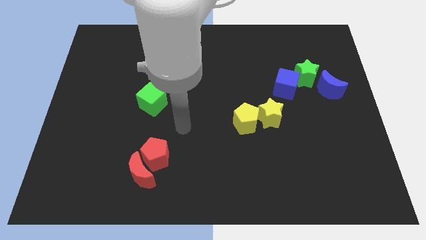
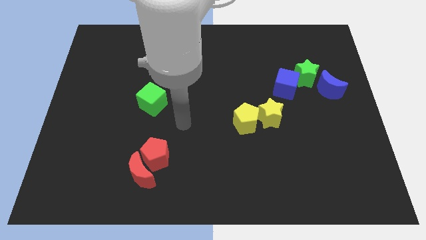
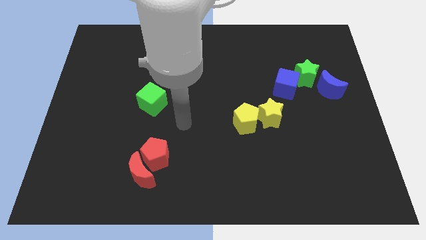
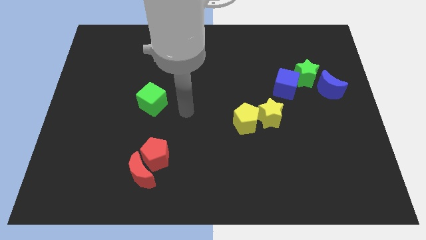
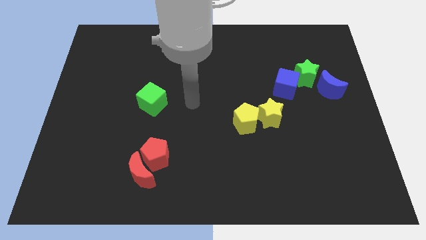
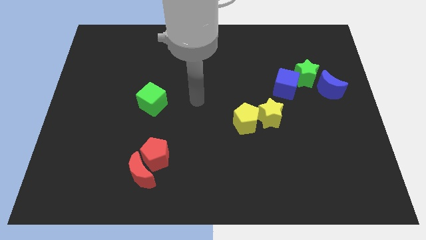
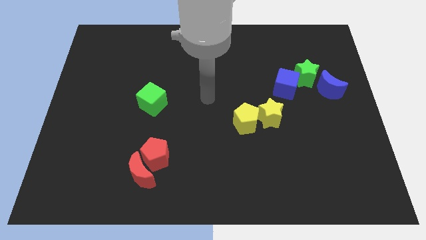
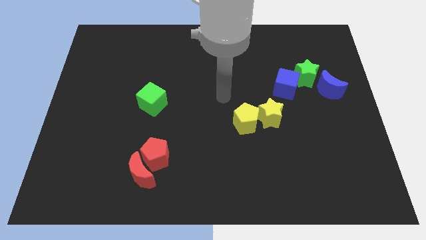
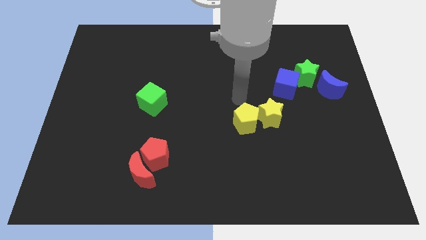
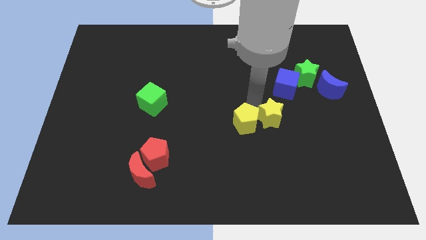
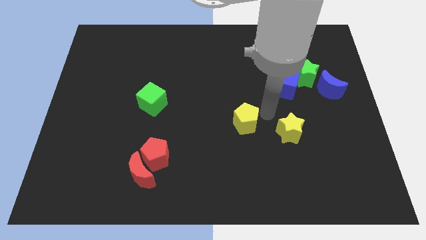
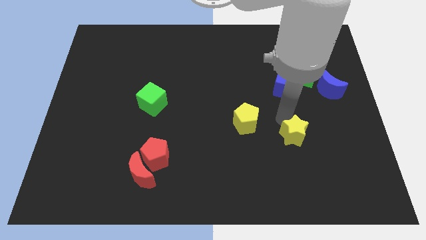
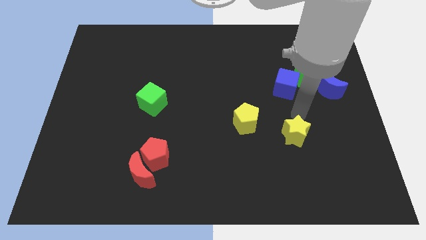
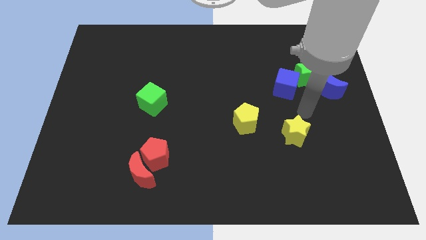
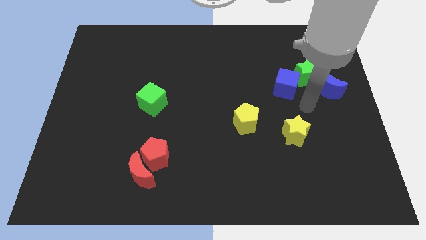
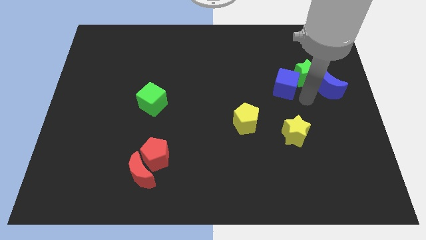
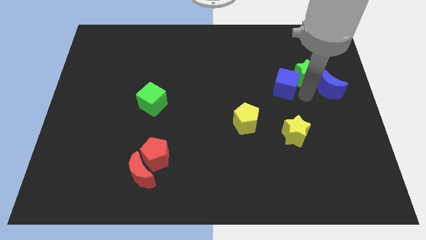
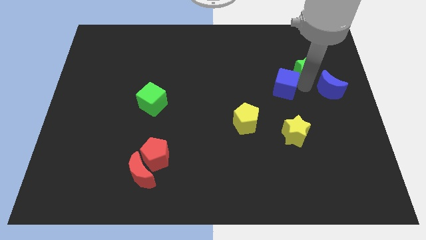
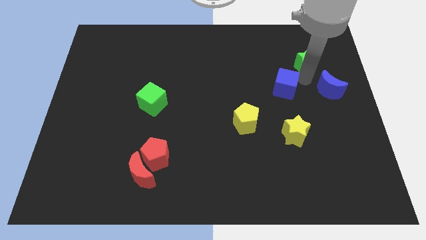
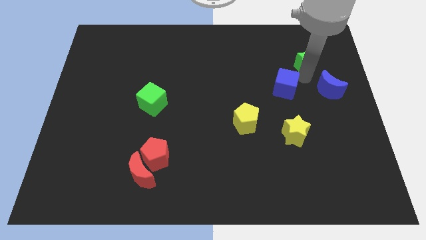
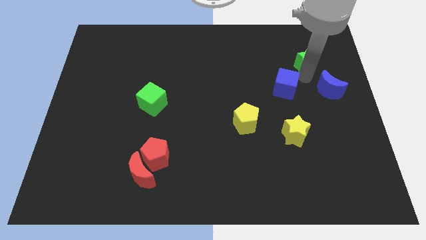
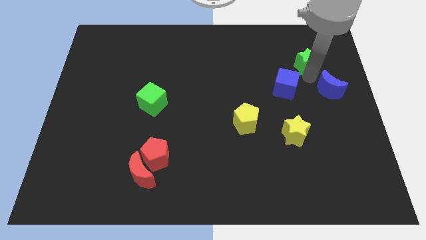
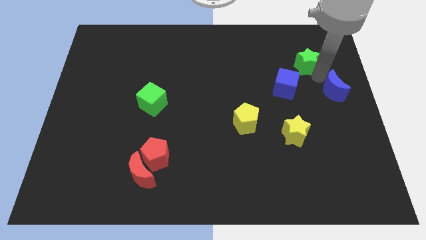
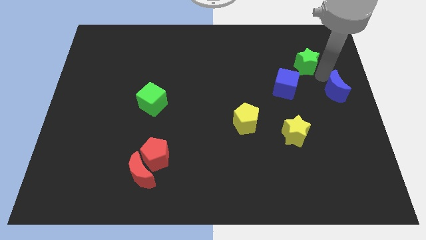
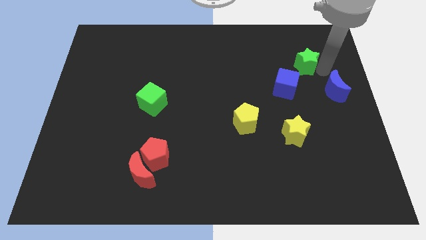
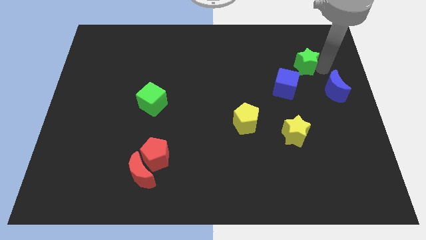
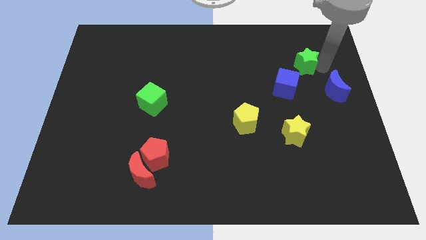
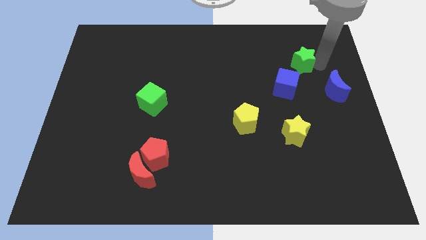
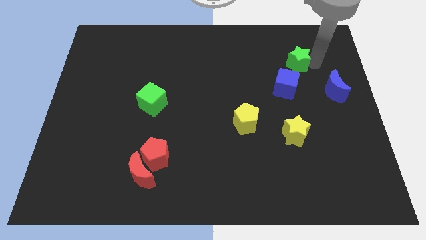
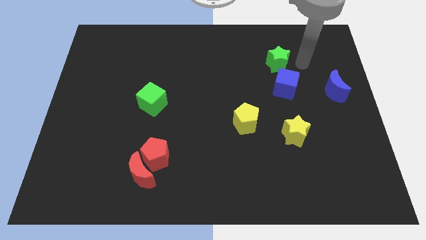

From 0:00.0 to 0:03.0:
place the green star above the blue cube

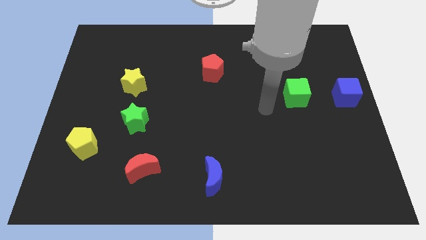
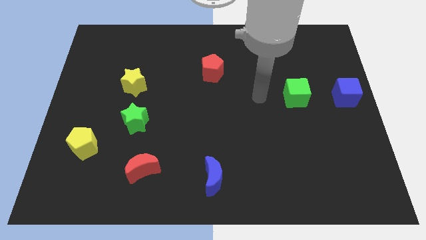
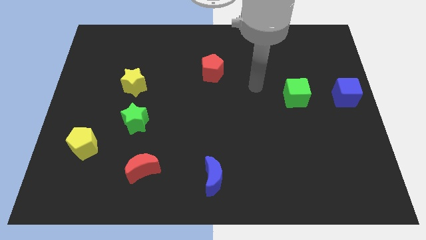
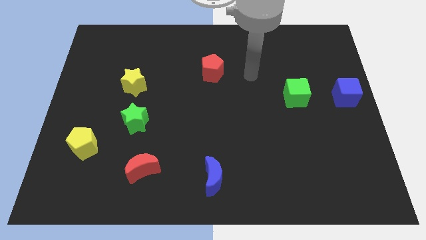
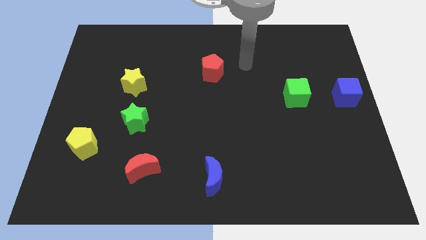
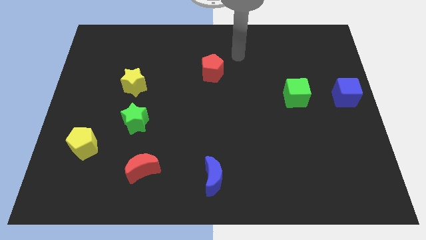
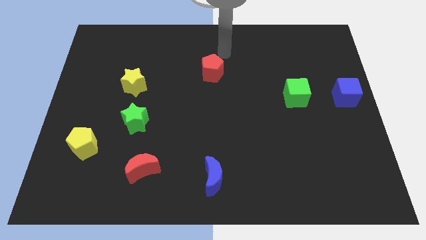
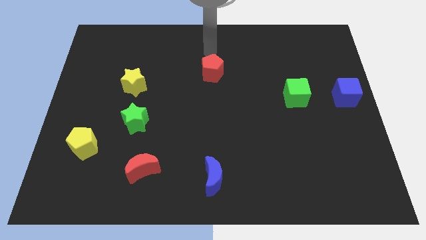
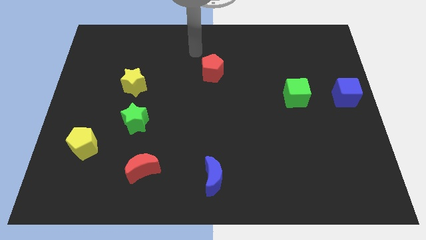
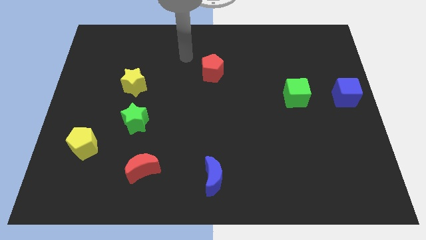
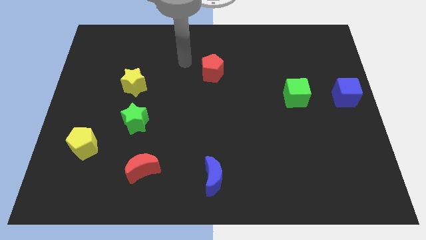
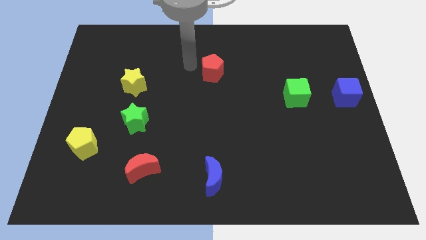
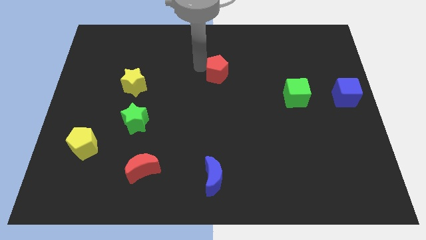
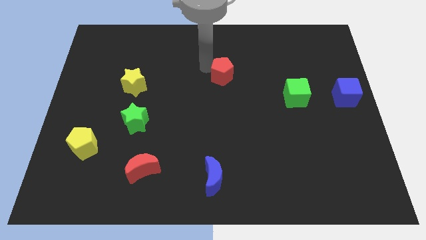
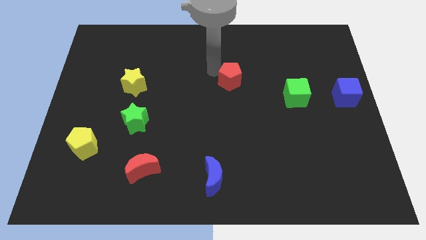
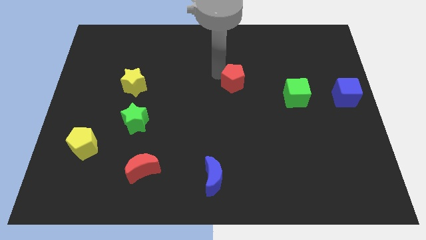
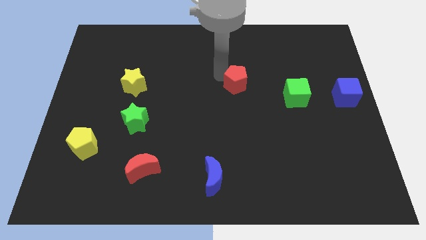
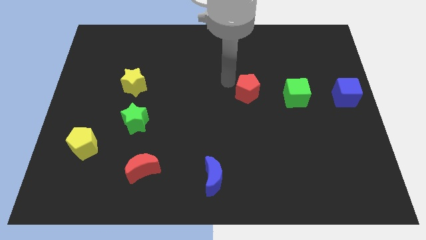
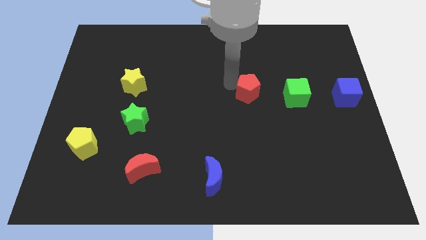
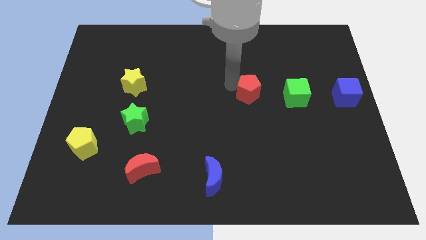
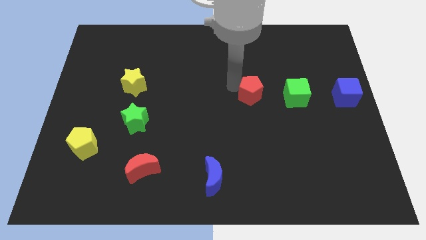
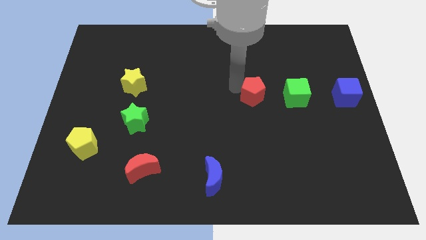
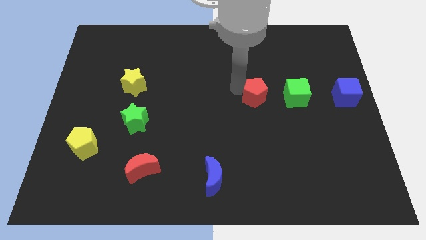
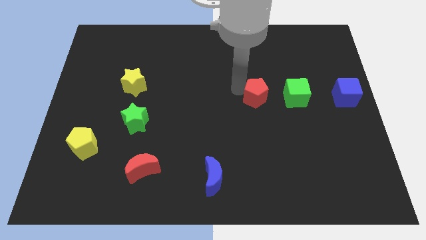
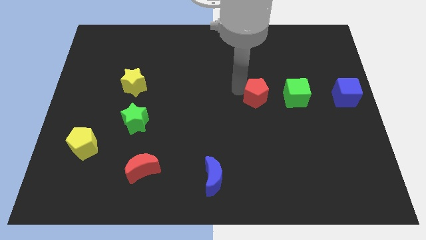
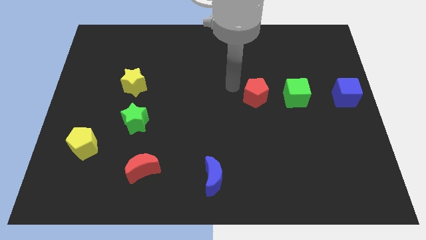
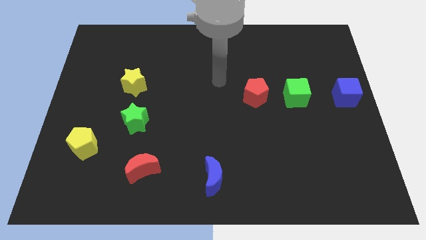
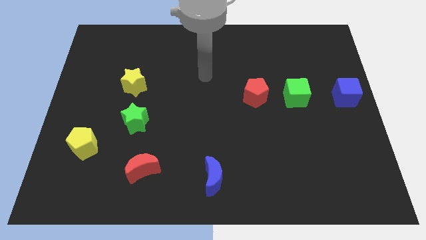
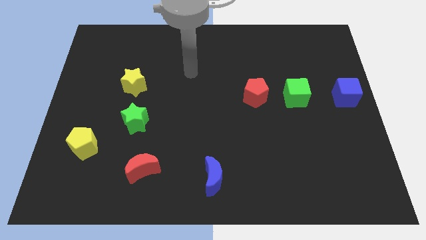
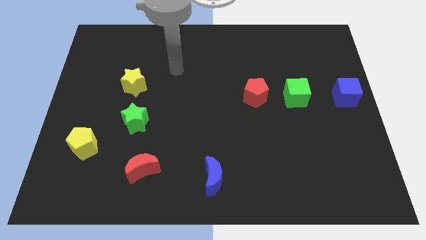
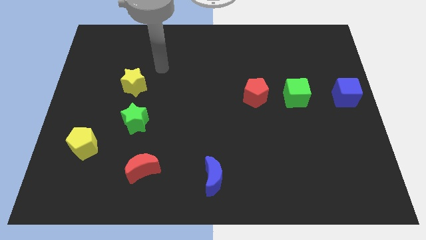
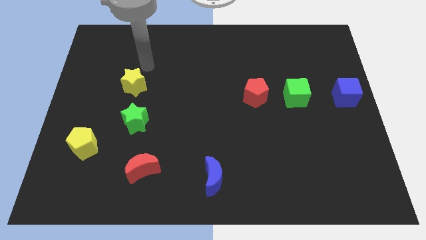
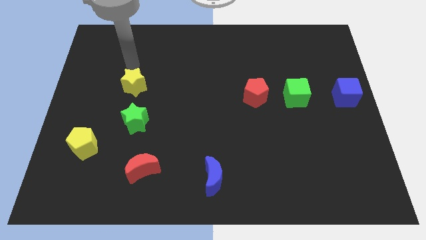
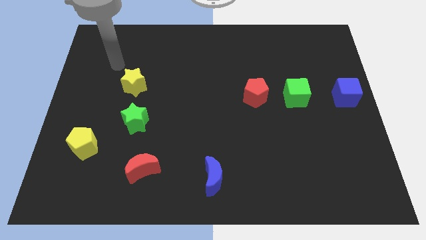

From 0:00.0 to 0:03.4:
move the red pentagon towards the green cube

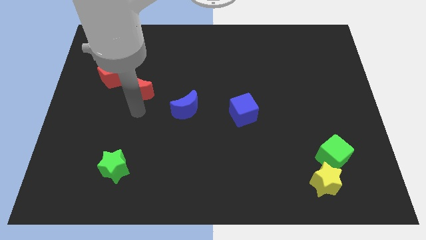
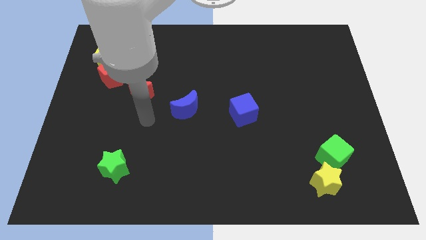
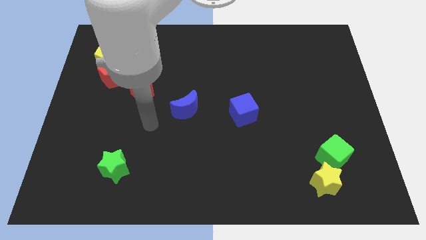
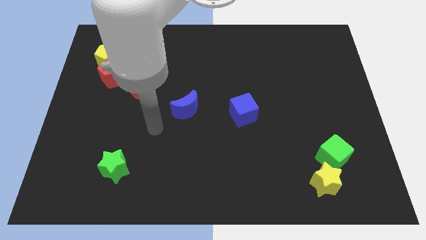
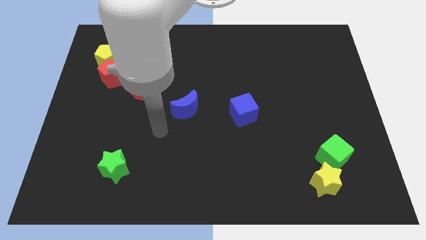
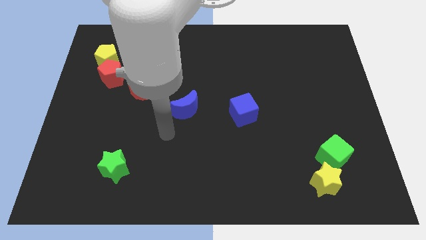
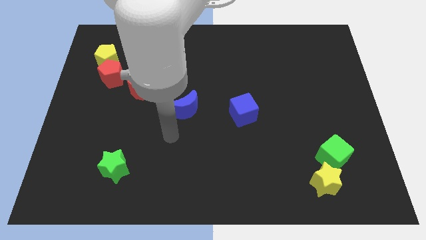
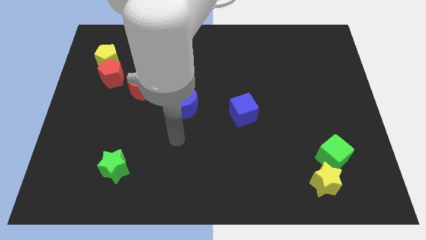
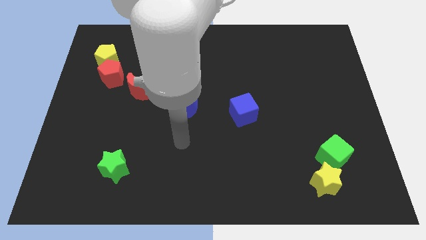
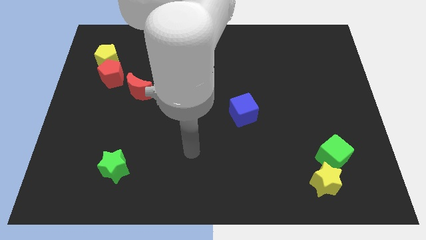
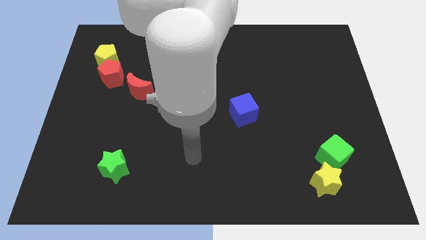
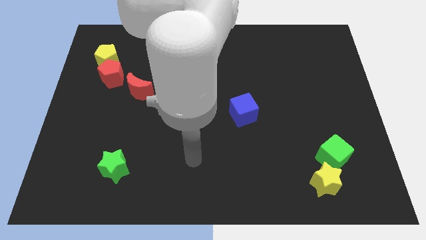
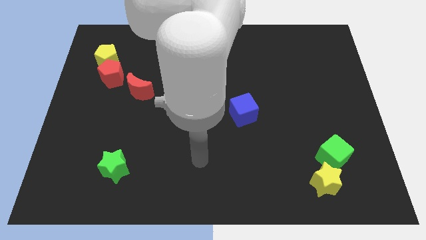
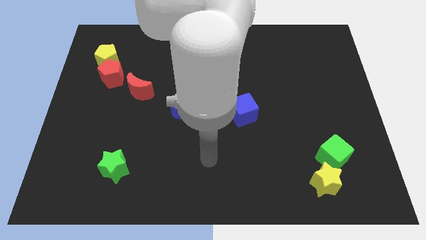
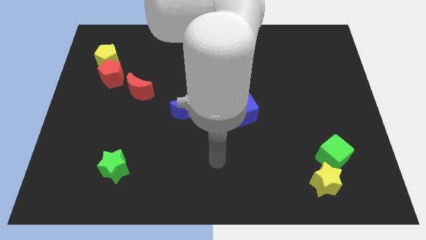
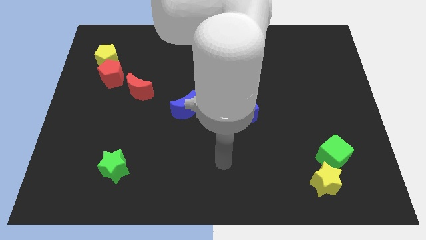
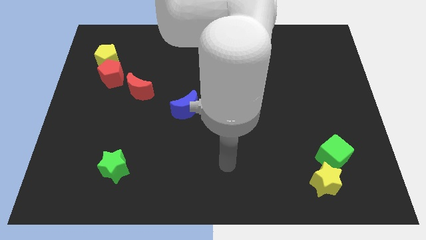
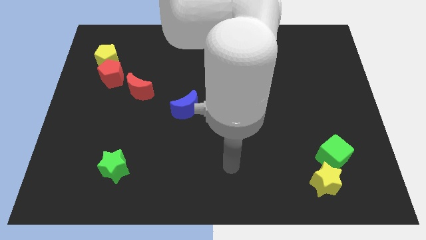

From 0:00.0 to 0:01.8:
place your arm in between the green star and green cube

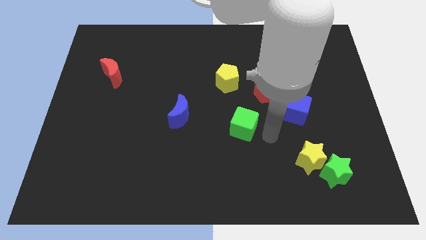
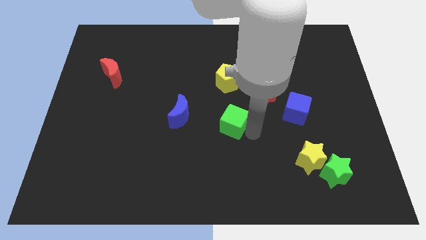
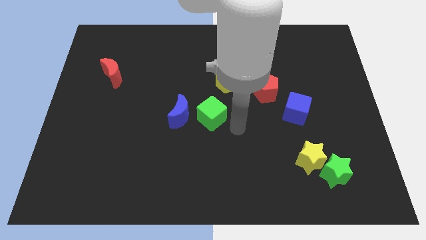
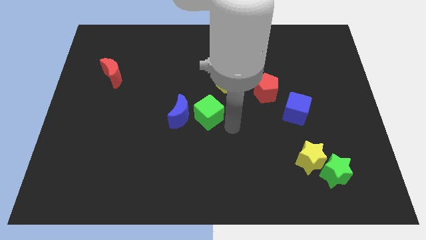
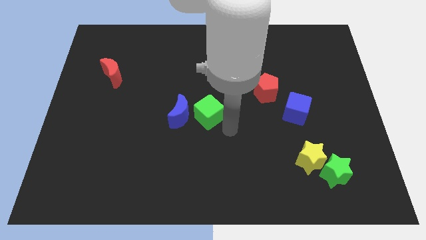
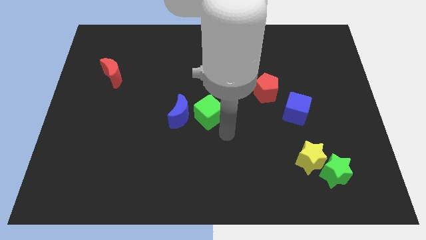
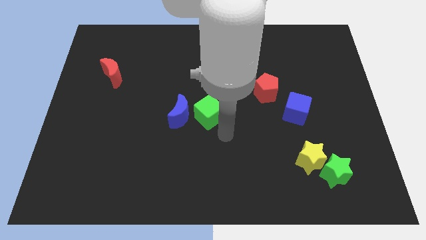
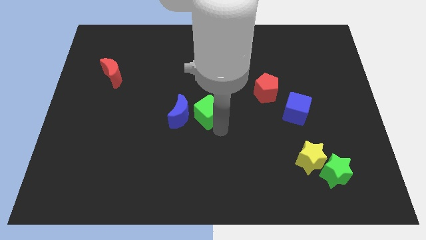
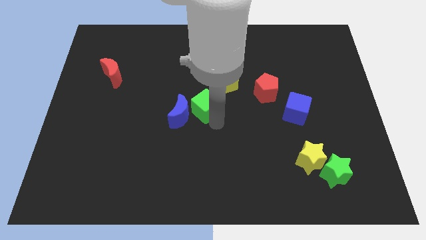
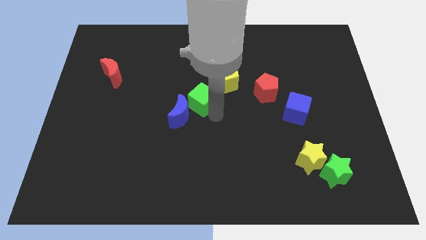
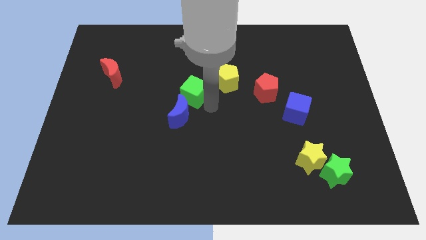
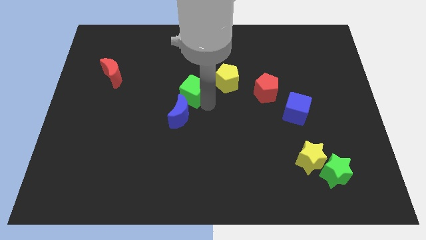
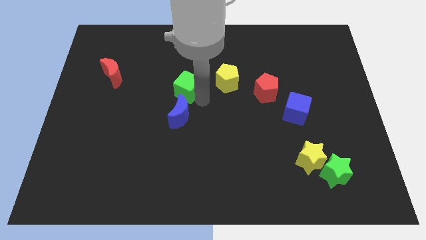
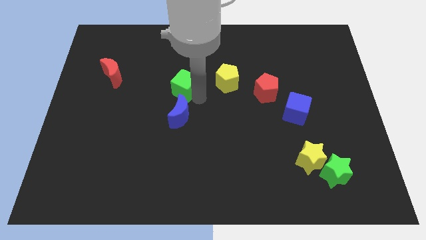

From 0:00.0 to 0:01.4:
push the green cube to the top of blue crescent
